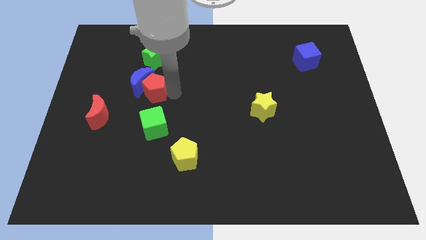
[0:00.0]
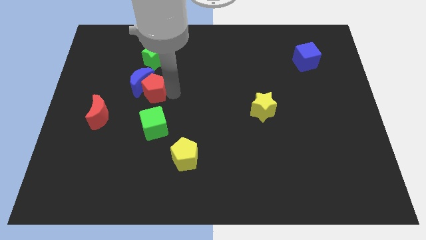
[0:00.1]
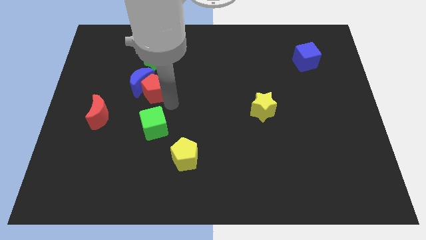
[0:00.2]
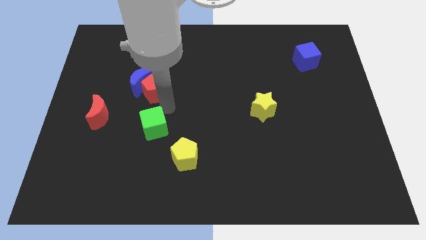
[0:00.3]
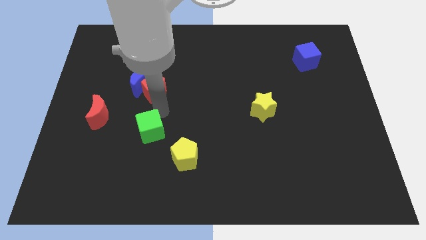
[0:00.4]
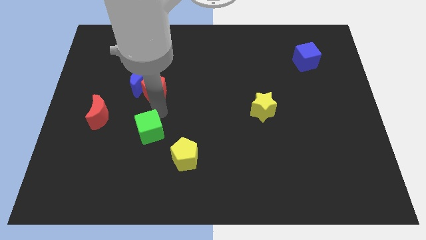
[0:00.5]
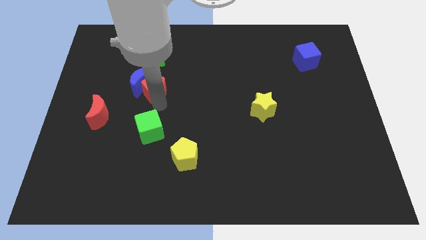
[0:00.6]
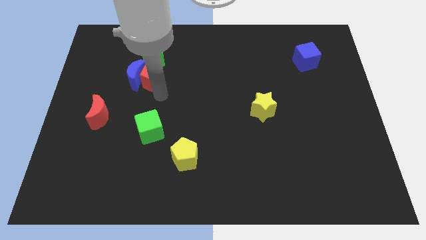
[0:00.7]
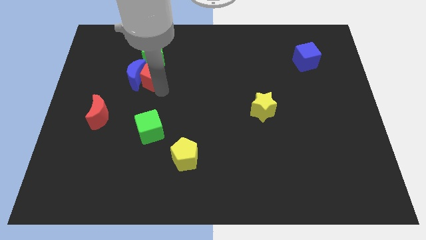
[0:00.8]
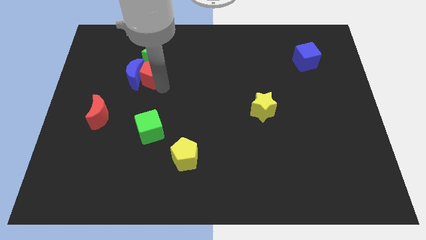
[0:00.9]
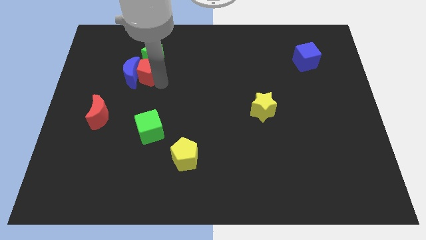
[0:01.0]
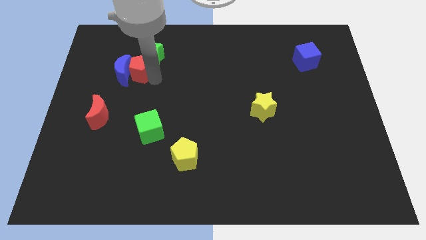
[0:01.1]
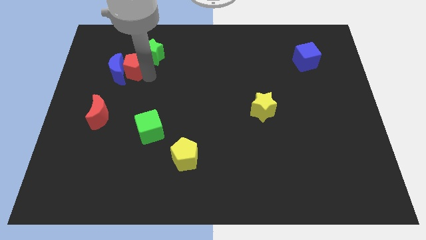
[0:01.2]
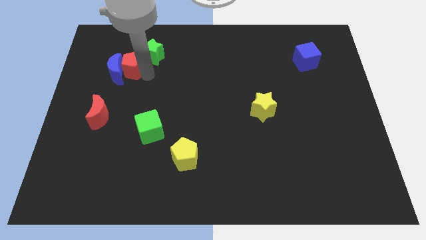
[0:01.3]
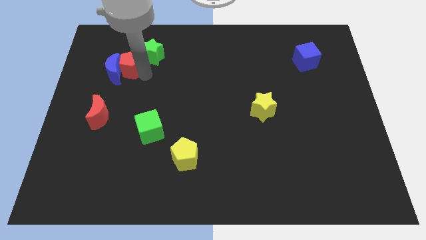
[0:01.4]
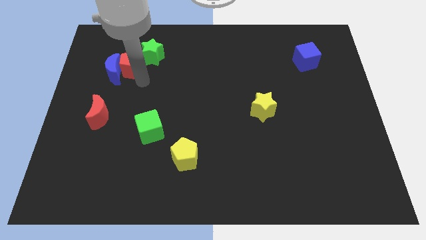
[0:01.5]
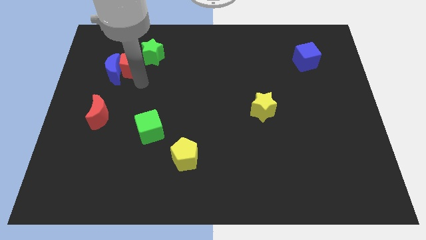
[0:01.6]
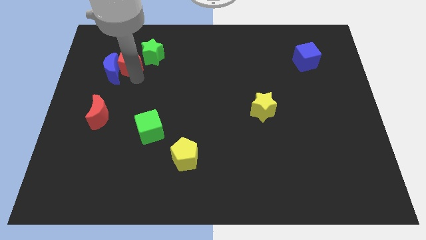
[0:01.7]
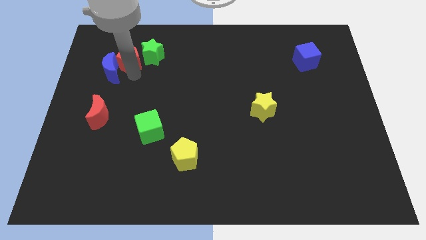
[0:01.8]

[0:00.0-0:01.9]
slide the blue moon and the red pentagon up slightly

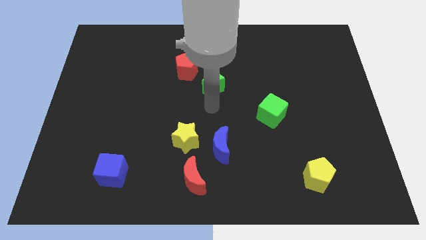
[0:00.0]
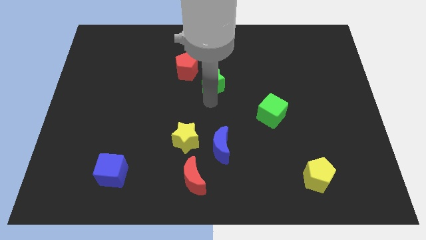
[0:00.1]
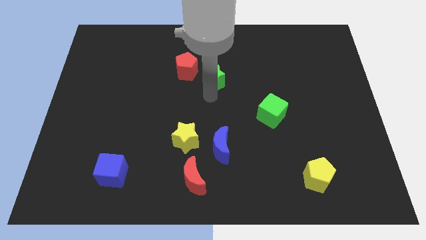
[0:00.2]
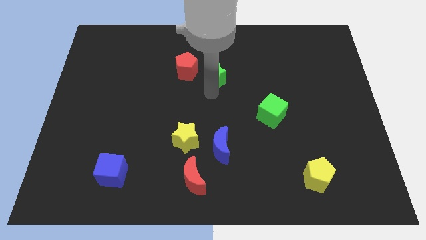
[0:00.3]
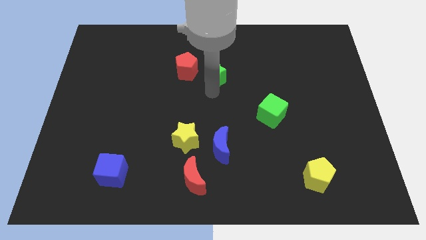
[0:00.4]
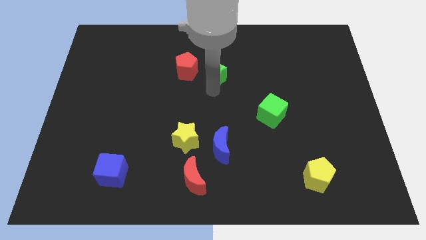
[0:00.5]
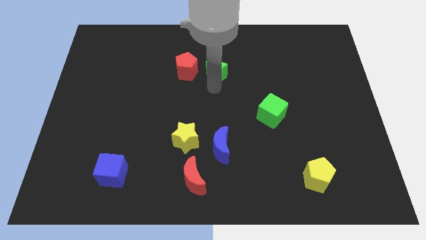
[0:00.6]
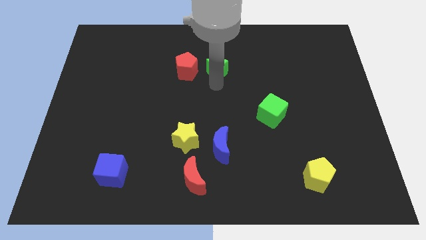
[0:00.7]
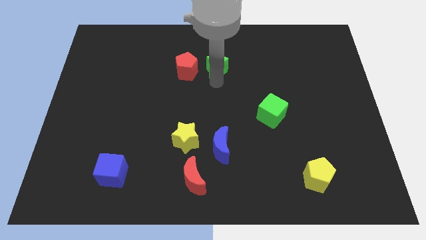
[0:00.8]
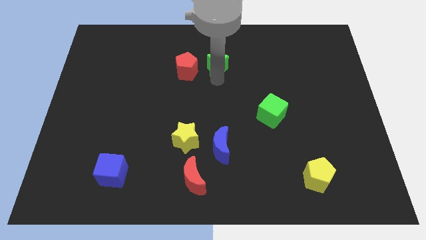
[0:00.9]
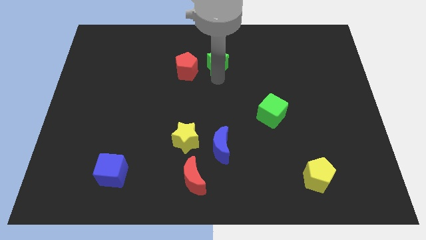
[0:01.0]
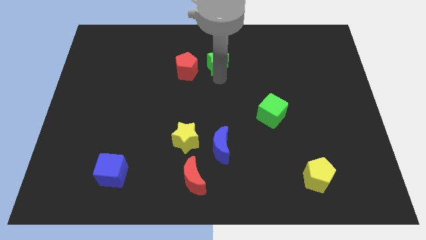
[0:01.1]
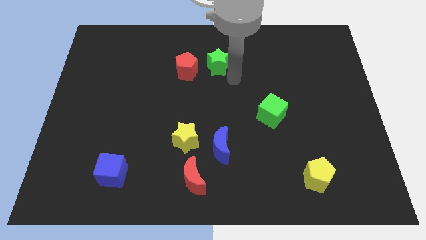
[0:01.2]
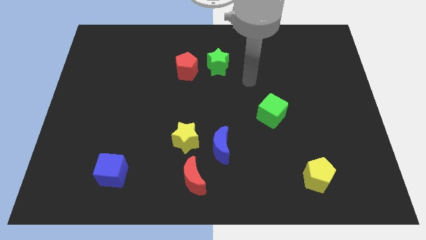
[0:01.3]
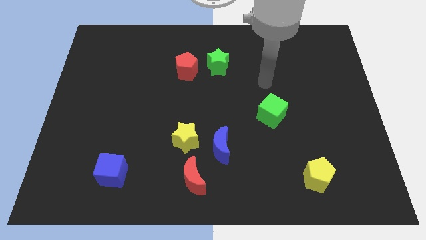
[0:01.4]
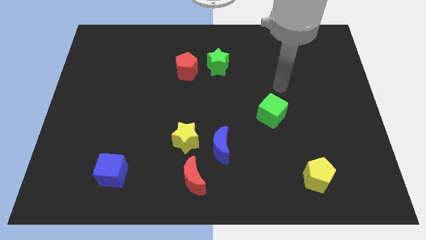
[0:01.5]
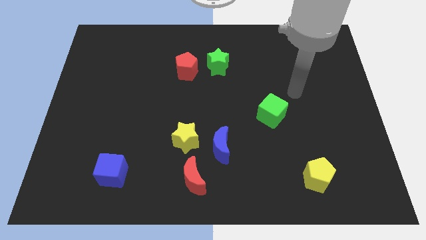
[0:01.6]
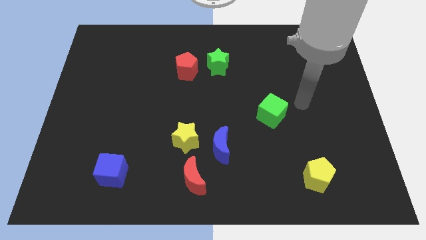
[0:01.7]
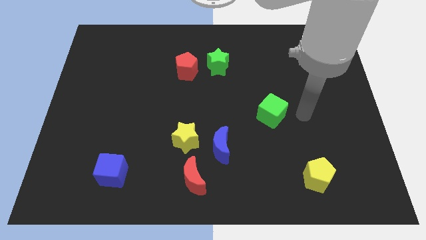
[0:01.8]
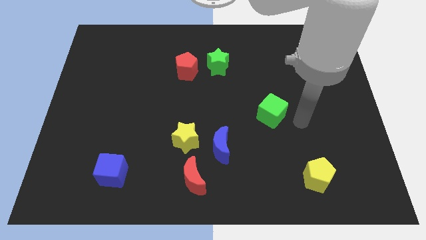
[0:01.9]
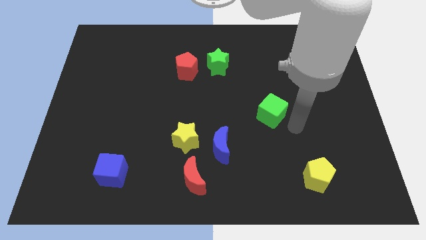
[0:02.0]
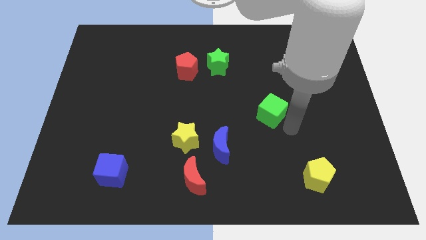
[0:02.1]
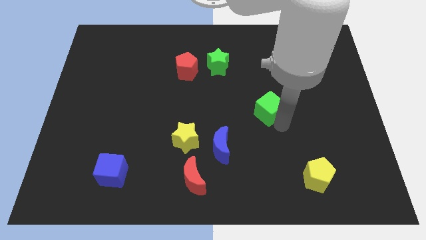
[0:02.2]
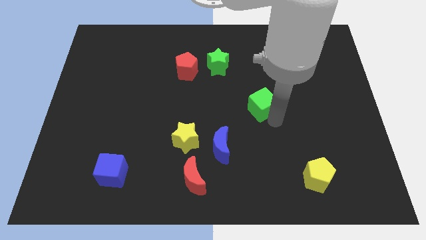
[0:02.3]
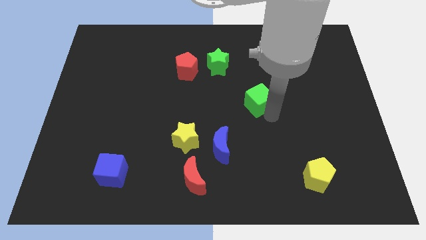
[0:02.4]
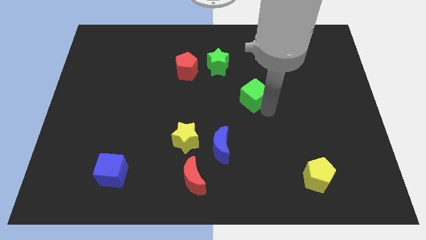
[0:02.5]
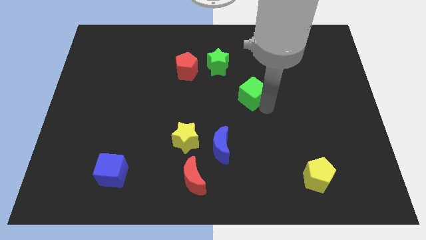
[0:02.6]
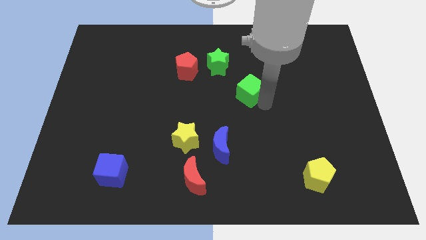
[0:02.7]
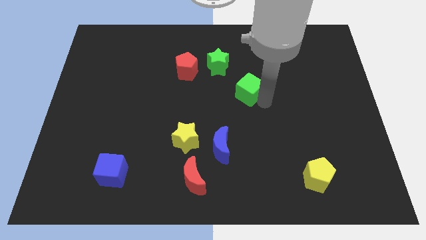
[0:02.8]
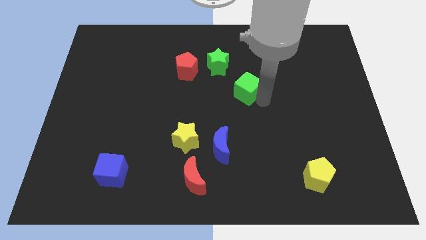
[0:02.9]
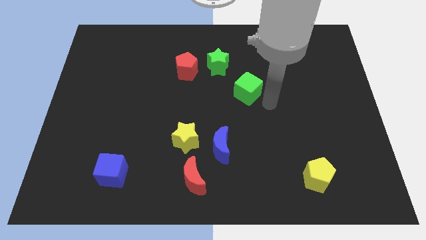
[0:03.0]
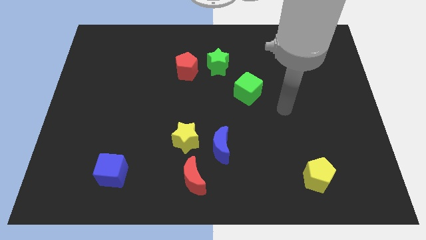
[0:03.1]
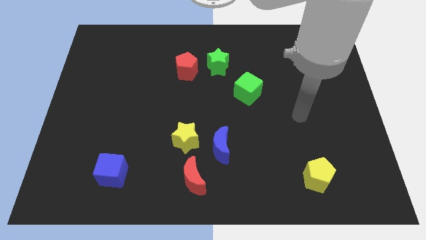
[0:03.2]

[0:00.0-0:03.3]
place the green cube to the bottom right side of the green star

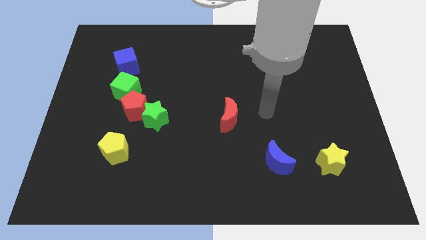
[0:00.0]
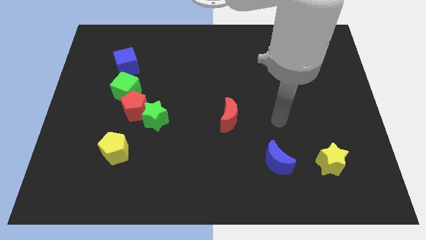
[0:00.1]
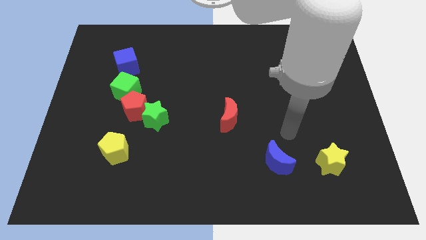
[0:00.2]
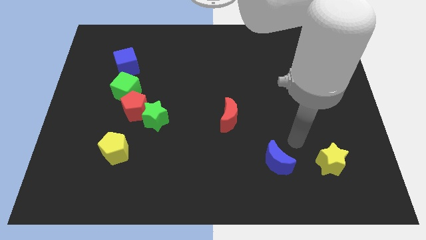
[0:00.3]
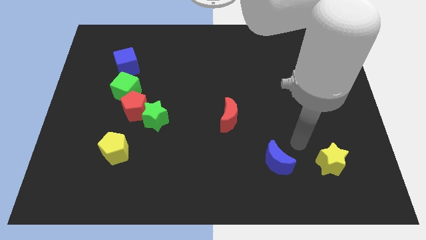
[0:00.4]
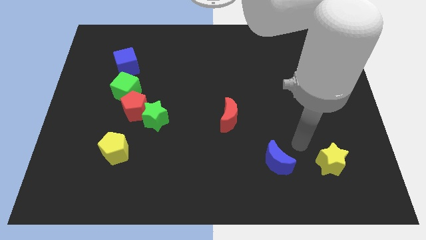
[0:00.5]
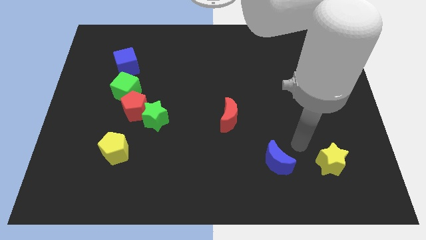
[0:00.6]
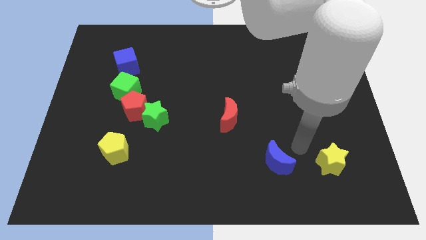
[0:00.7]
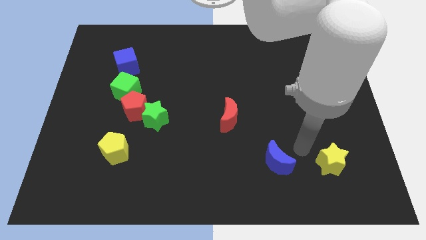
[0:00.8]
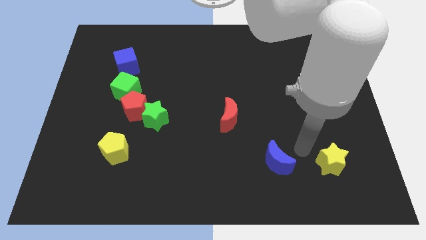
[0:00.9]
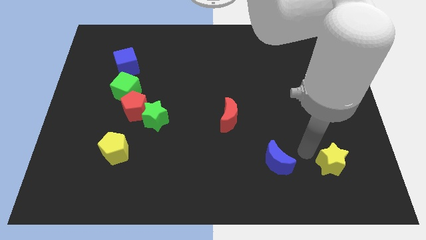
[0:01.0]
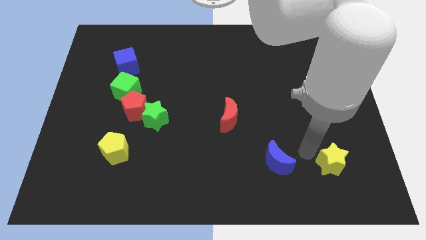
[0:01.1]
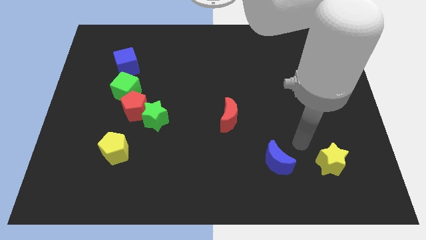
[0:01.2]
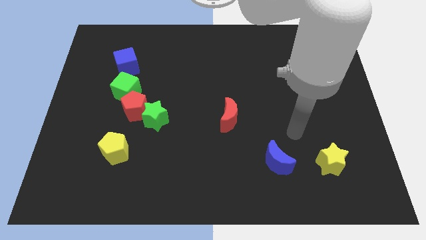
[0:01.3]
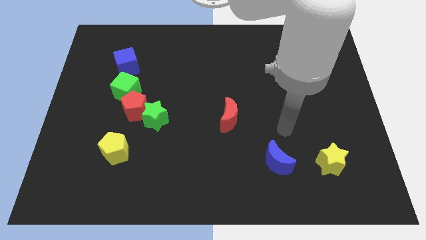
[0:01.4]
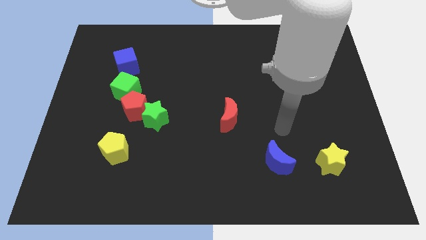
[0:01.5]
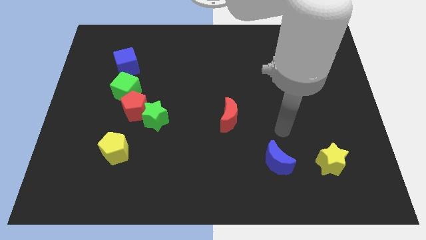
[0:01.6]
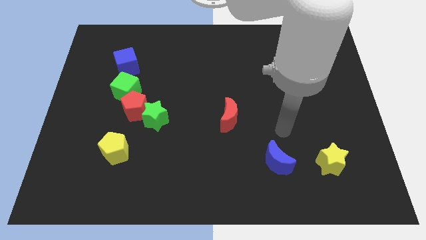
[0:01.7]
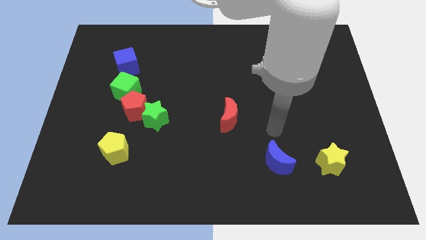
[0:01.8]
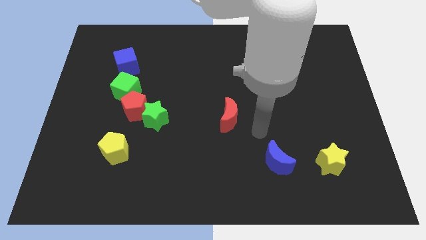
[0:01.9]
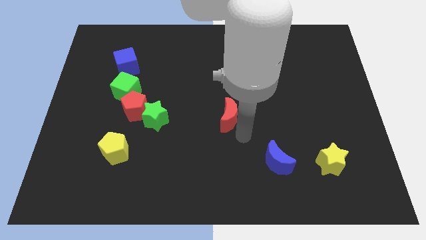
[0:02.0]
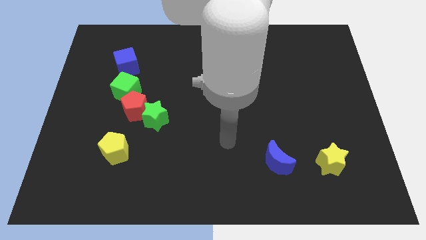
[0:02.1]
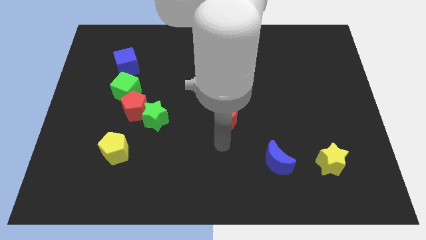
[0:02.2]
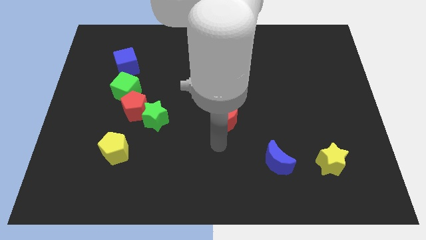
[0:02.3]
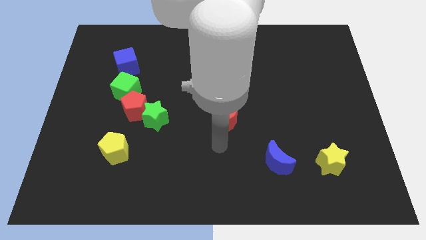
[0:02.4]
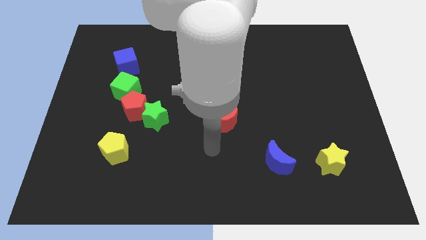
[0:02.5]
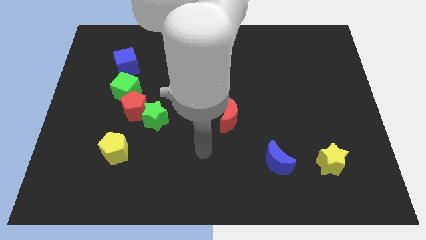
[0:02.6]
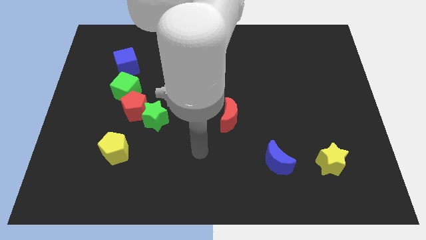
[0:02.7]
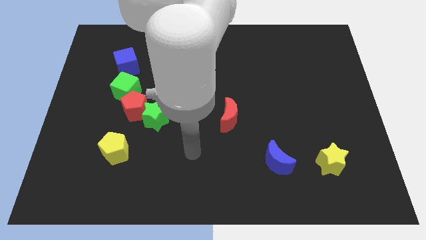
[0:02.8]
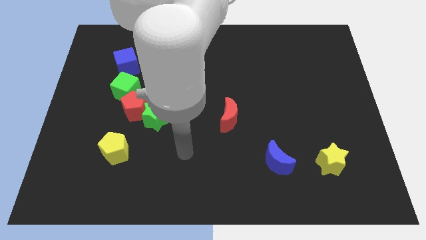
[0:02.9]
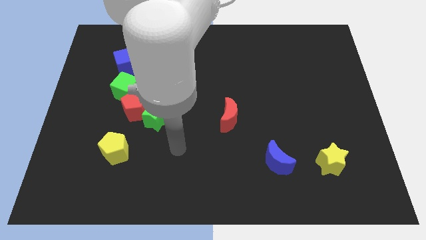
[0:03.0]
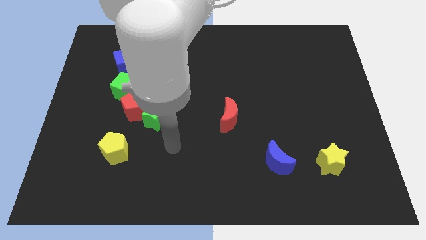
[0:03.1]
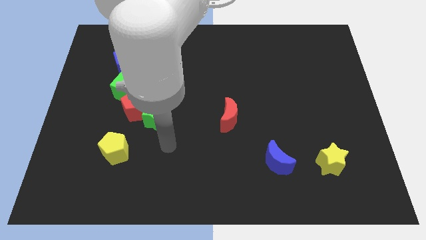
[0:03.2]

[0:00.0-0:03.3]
place arm on the bottom of green star

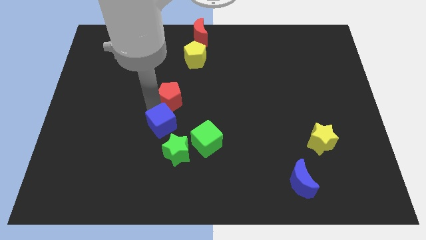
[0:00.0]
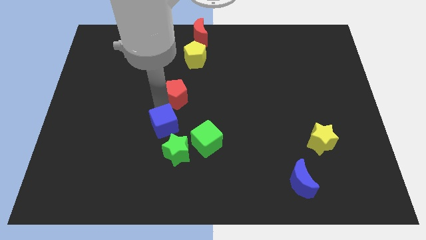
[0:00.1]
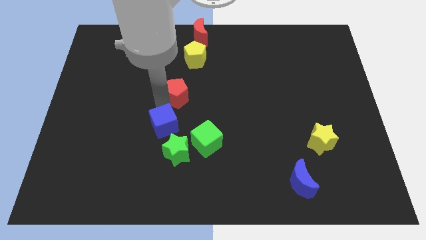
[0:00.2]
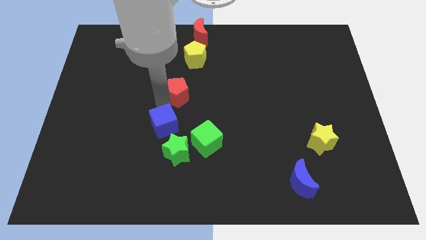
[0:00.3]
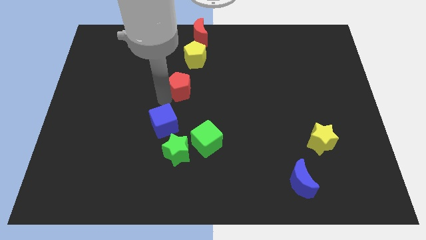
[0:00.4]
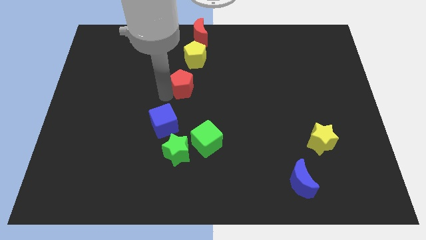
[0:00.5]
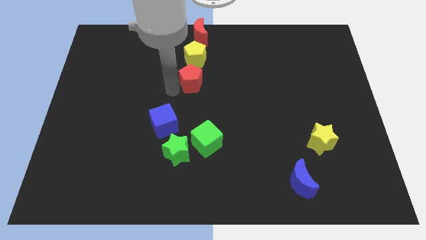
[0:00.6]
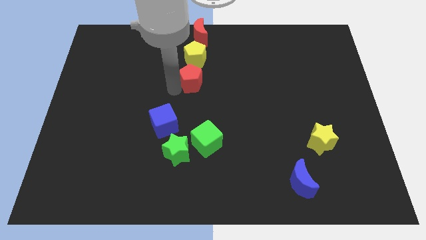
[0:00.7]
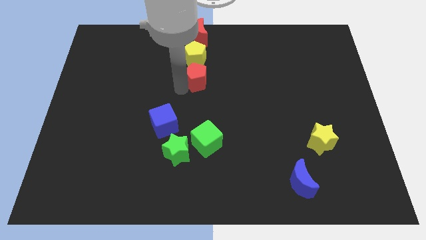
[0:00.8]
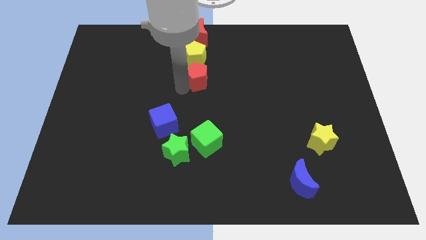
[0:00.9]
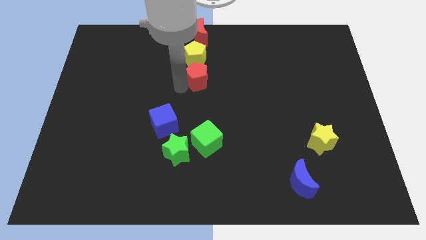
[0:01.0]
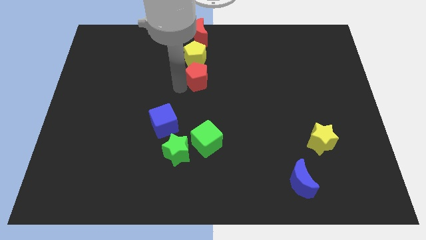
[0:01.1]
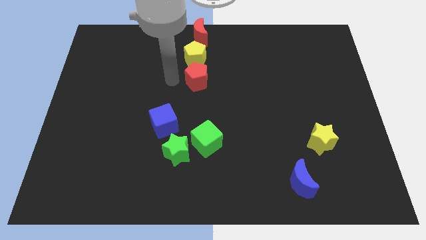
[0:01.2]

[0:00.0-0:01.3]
place the red pentagon below the yellow pentagon
